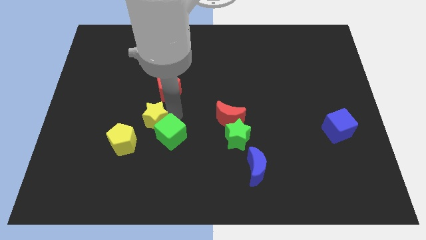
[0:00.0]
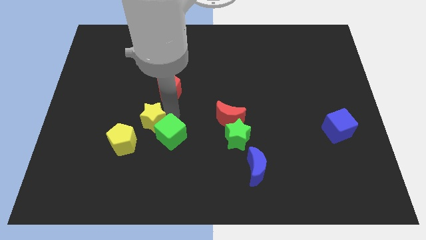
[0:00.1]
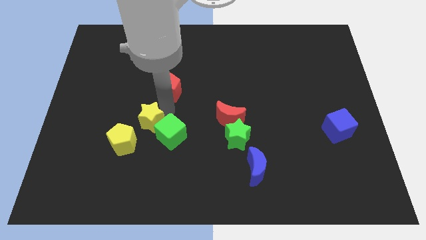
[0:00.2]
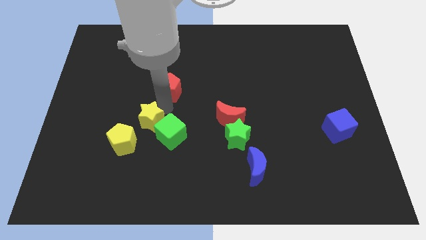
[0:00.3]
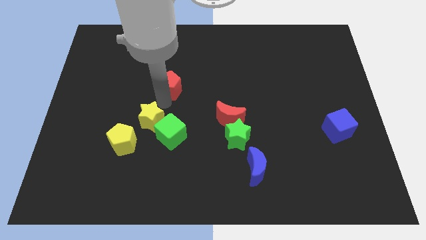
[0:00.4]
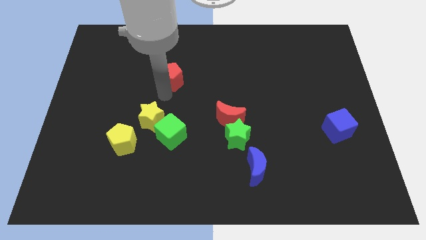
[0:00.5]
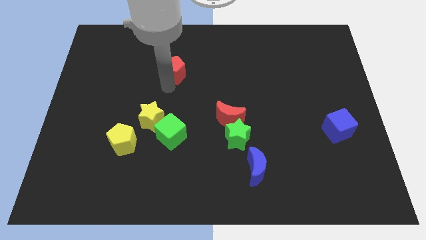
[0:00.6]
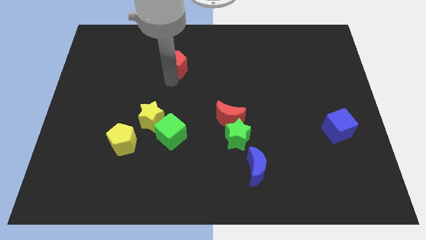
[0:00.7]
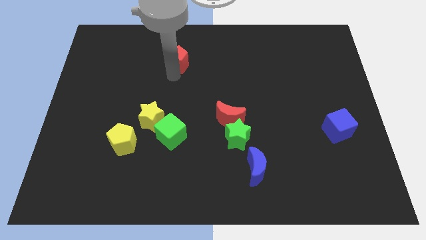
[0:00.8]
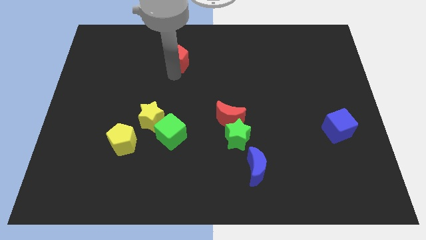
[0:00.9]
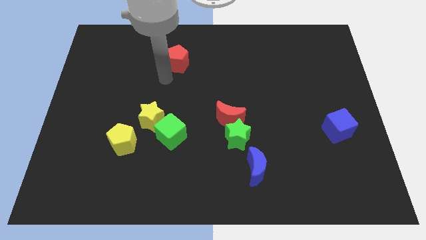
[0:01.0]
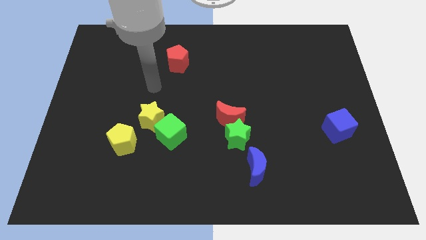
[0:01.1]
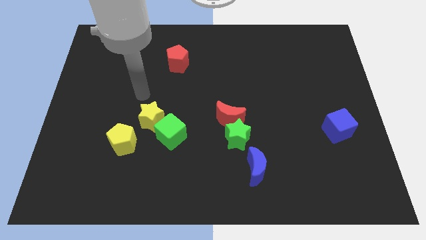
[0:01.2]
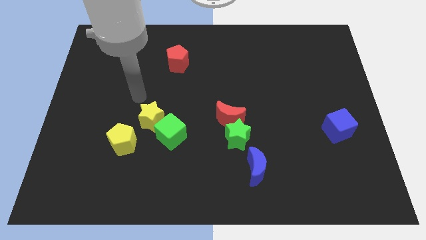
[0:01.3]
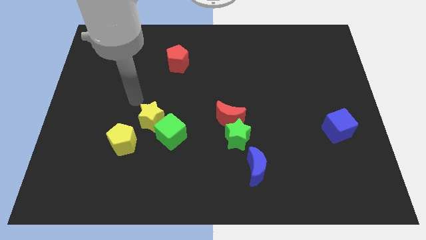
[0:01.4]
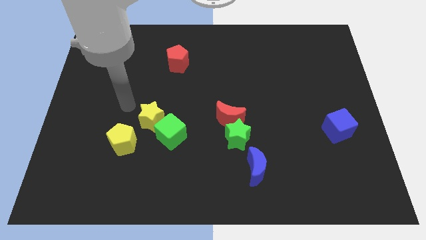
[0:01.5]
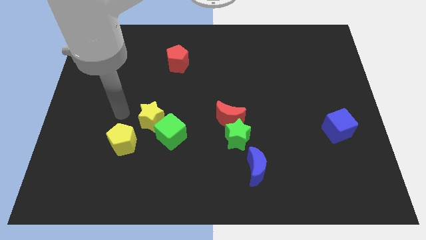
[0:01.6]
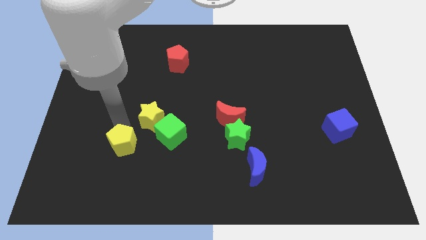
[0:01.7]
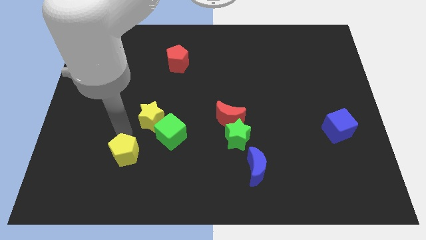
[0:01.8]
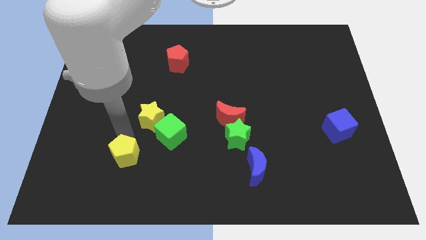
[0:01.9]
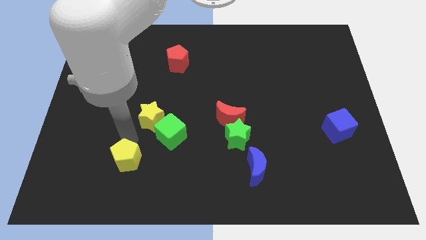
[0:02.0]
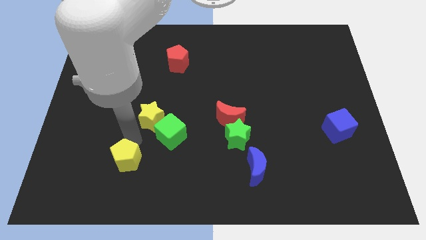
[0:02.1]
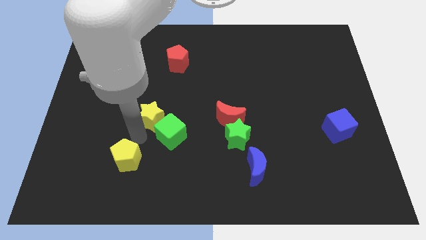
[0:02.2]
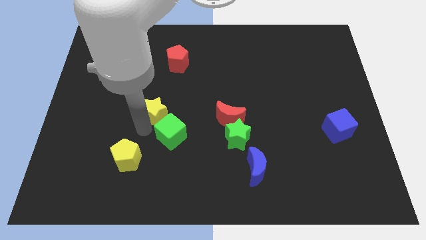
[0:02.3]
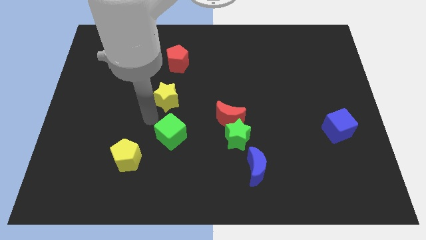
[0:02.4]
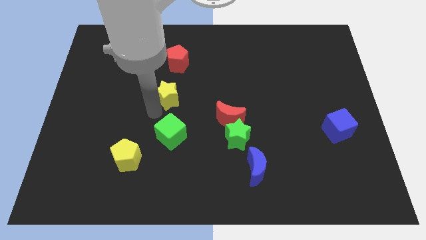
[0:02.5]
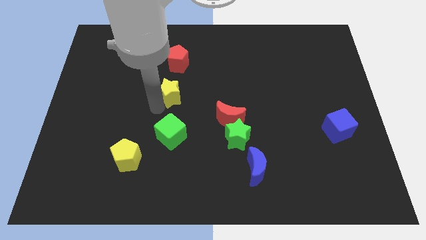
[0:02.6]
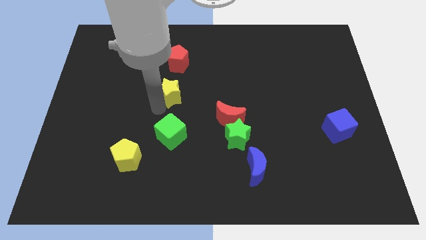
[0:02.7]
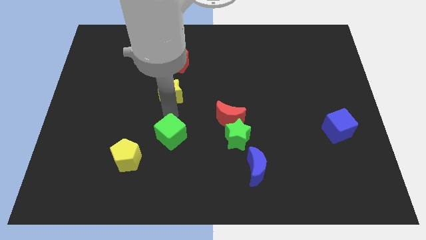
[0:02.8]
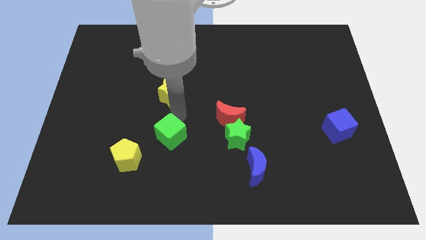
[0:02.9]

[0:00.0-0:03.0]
push yellow star below red pentagon

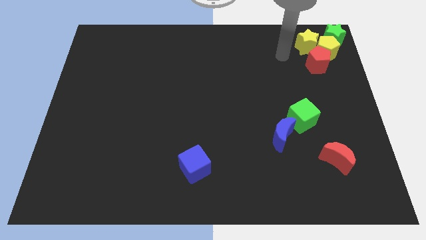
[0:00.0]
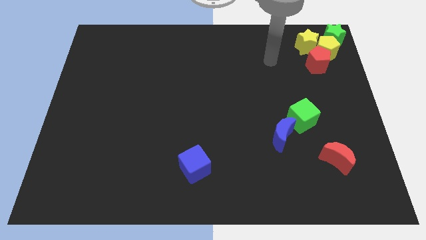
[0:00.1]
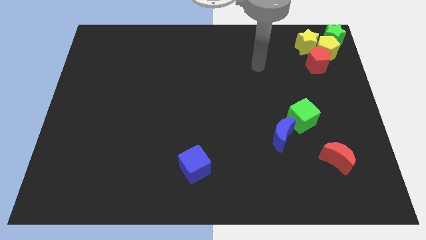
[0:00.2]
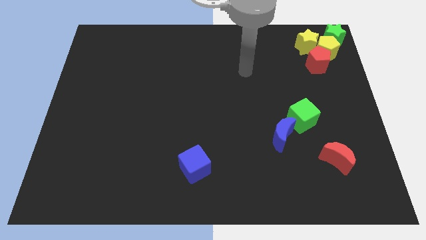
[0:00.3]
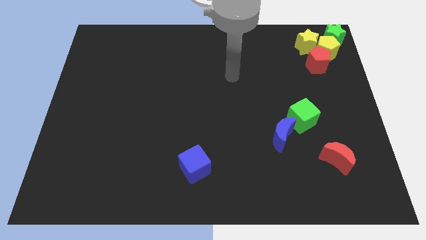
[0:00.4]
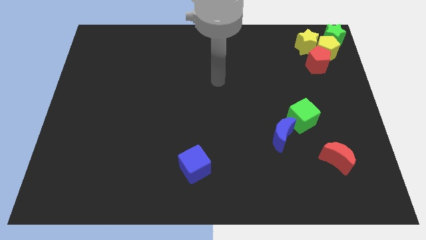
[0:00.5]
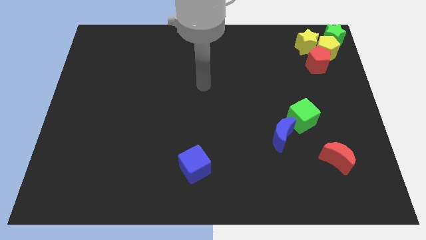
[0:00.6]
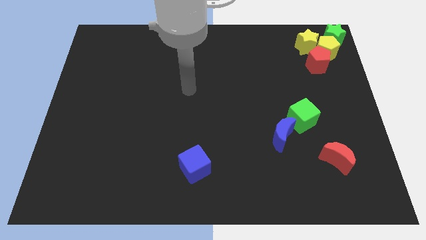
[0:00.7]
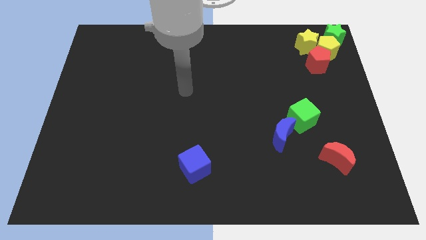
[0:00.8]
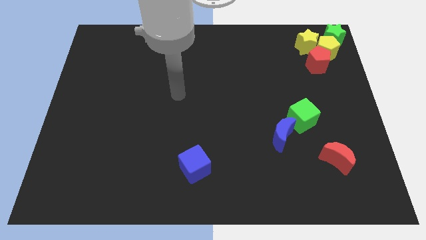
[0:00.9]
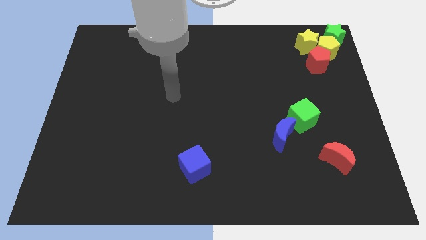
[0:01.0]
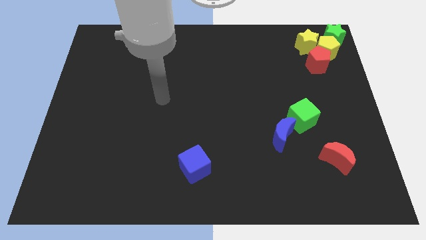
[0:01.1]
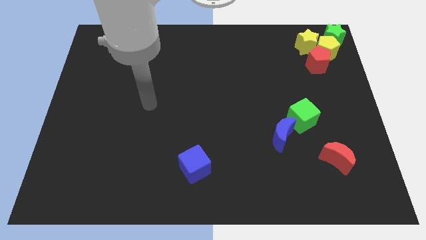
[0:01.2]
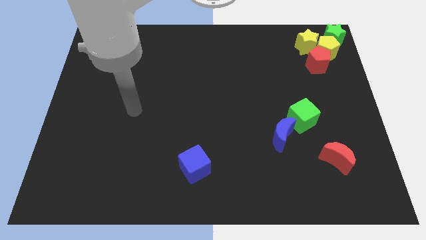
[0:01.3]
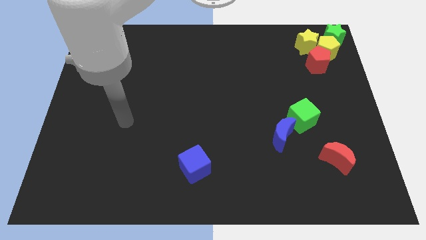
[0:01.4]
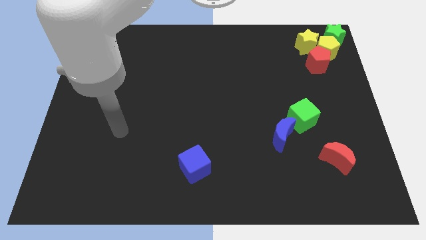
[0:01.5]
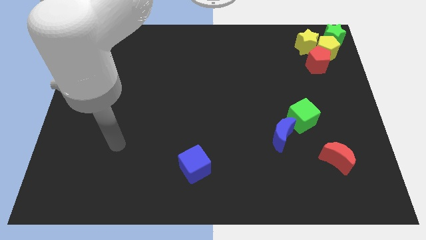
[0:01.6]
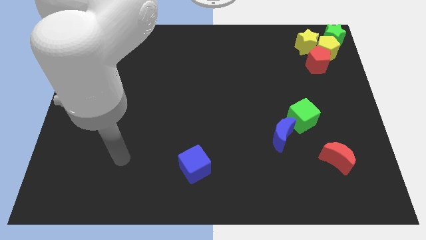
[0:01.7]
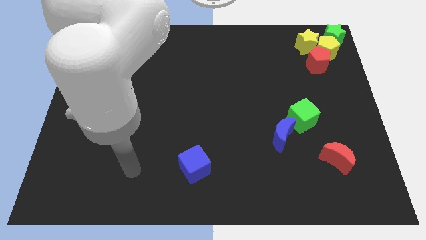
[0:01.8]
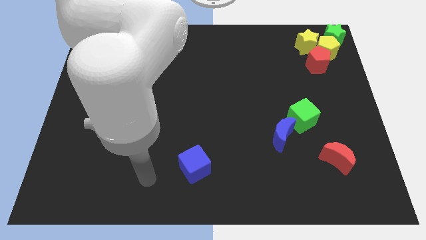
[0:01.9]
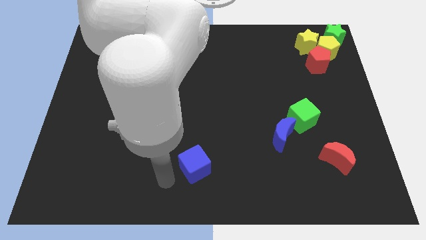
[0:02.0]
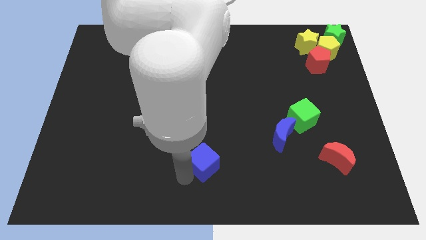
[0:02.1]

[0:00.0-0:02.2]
touch the left side of the blue cube

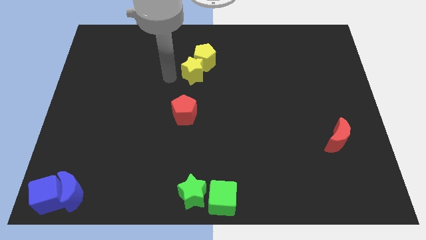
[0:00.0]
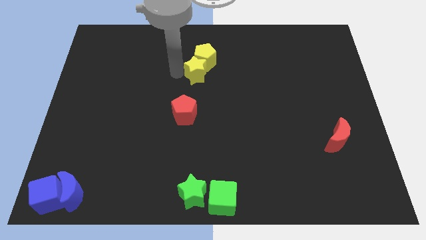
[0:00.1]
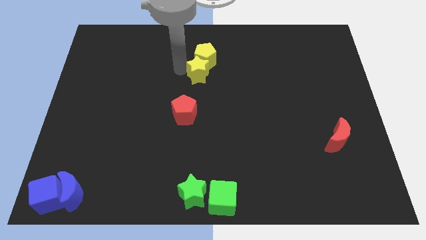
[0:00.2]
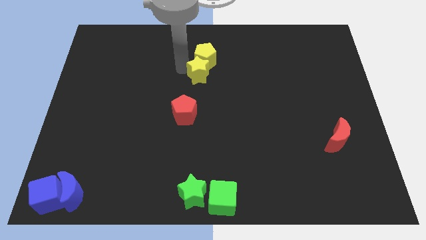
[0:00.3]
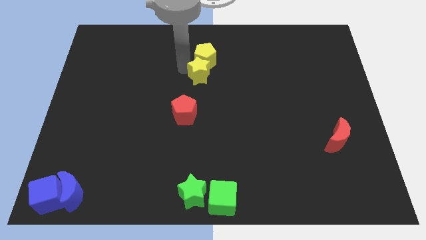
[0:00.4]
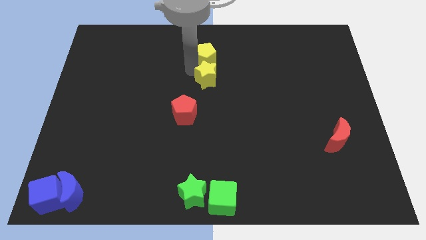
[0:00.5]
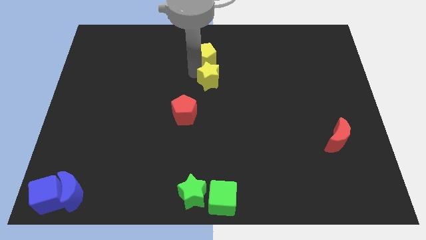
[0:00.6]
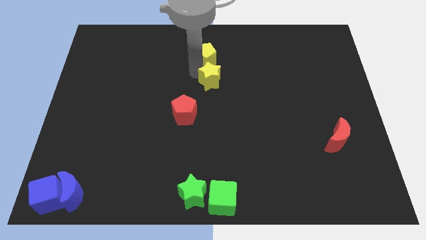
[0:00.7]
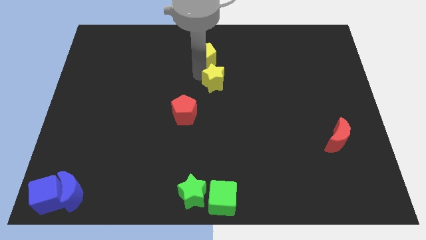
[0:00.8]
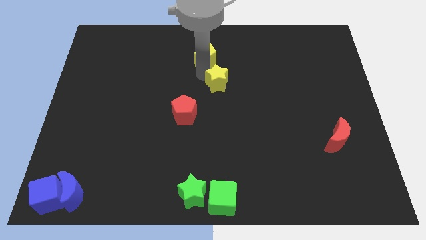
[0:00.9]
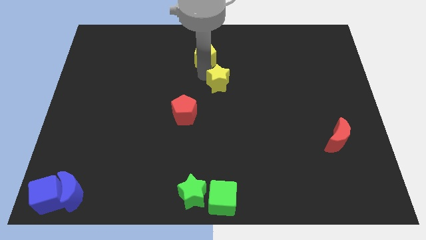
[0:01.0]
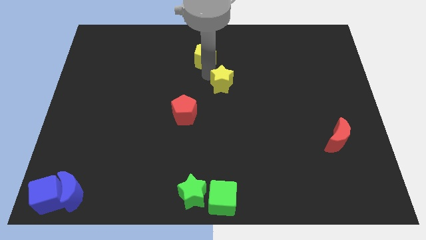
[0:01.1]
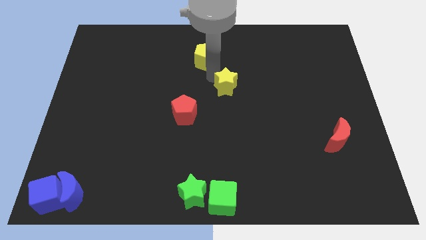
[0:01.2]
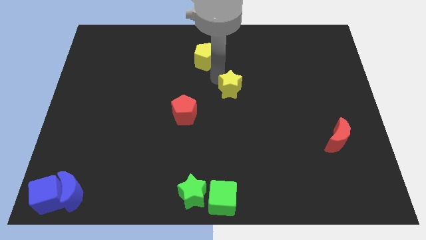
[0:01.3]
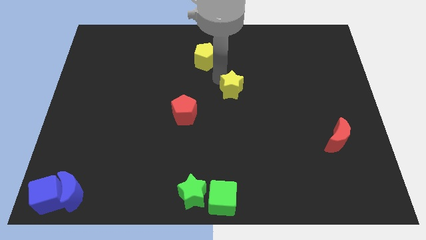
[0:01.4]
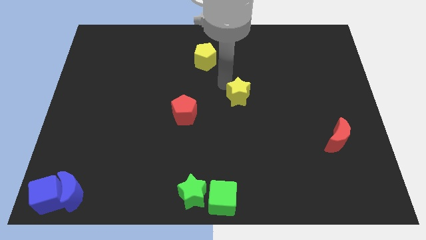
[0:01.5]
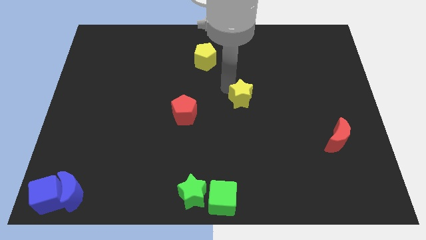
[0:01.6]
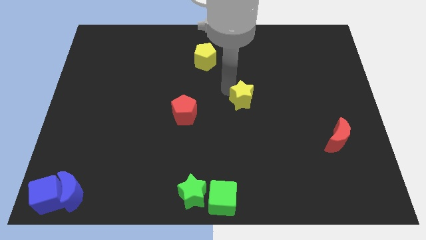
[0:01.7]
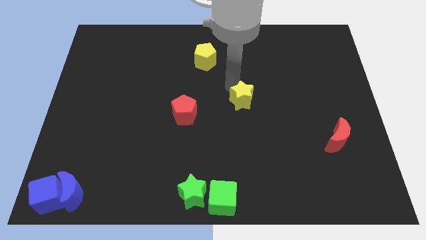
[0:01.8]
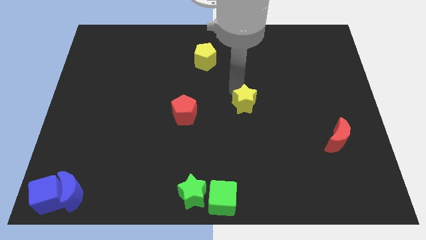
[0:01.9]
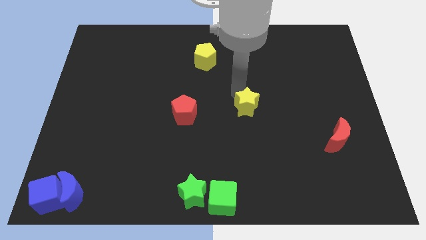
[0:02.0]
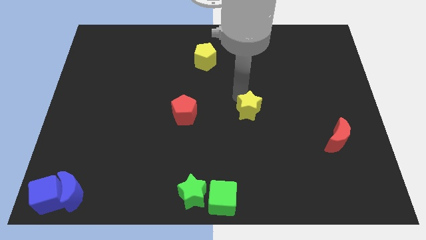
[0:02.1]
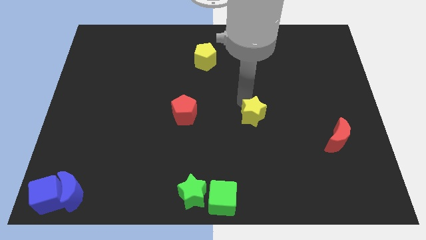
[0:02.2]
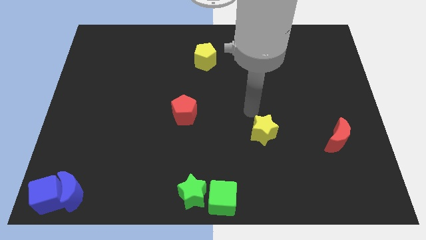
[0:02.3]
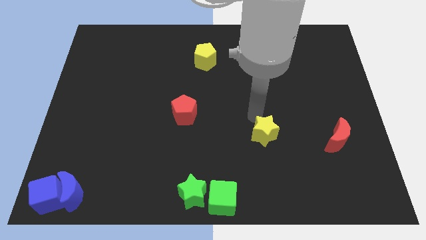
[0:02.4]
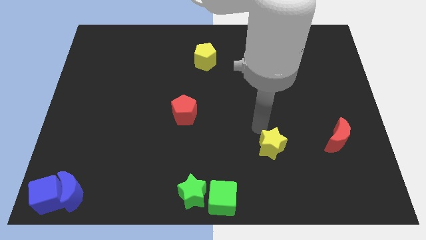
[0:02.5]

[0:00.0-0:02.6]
slide yellow star beside red pentagon

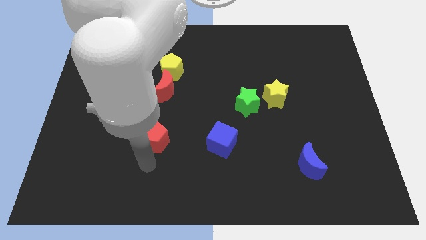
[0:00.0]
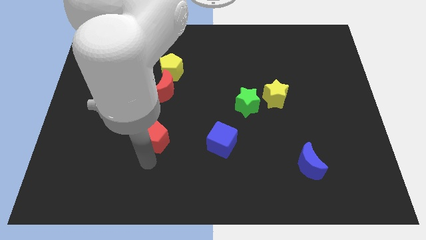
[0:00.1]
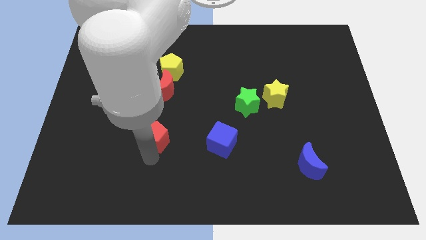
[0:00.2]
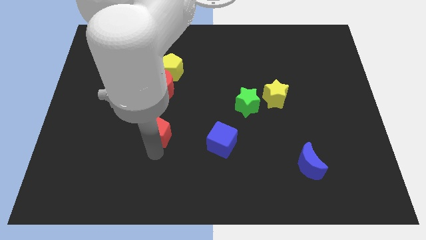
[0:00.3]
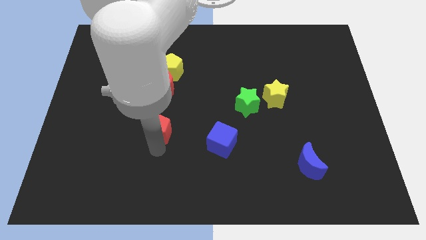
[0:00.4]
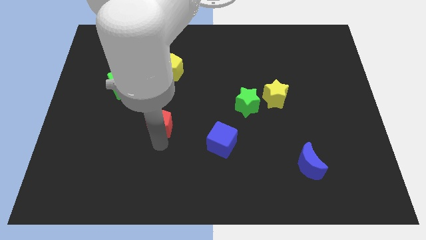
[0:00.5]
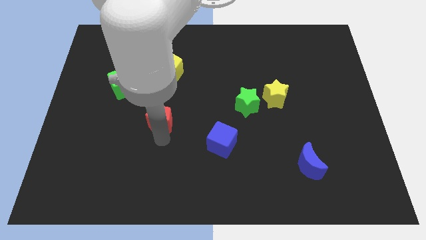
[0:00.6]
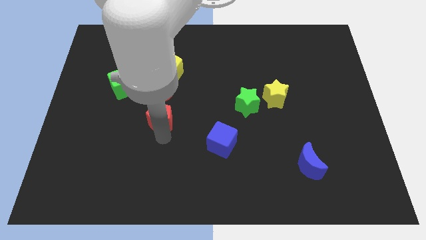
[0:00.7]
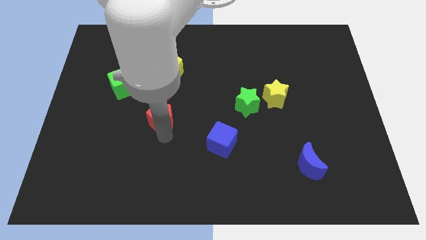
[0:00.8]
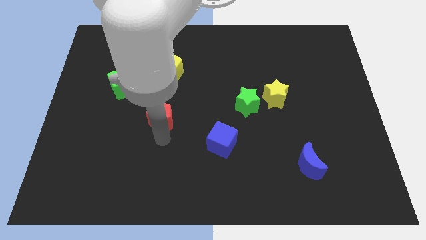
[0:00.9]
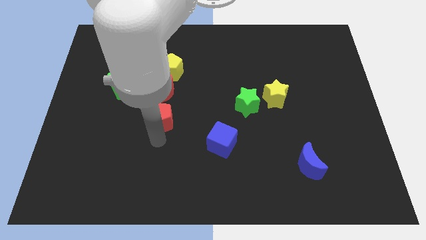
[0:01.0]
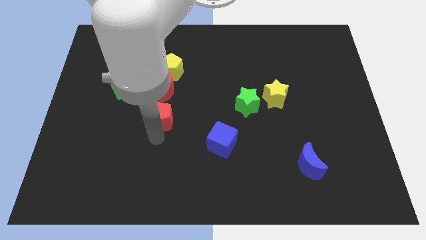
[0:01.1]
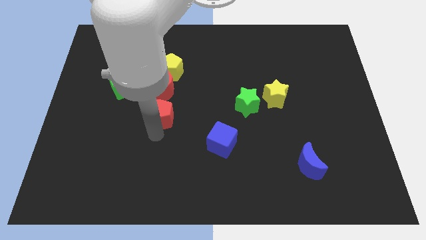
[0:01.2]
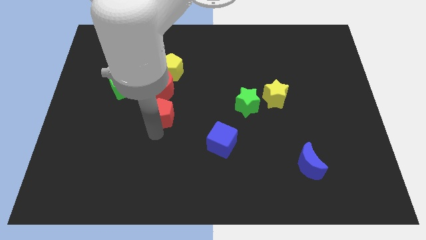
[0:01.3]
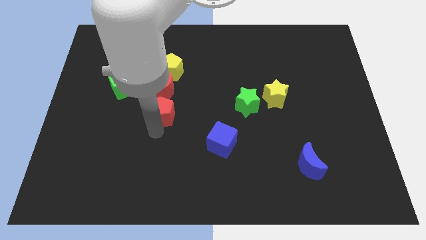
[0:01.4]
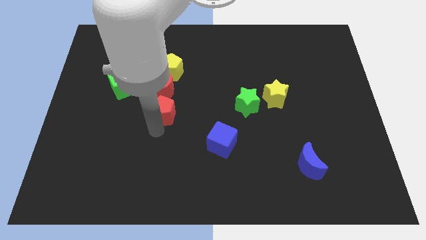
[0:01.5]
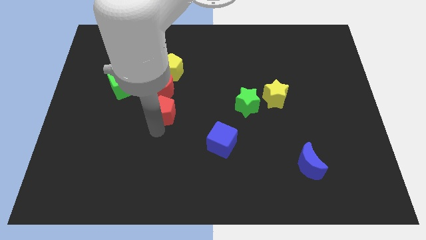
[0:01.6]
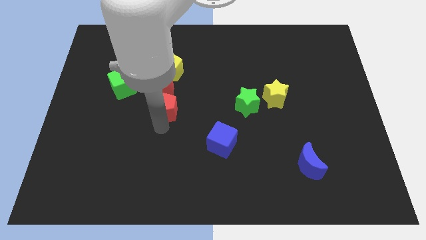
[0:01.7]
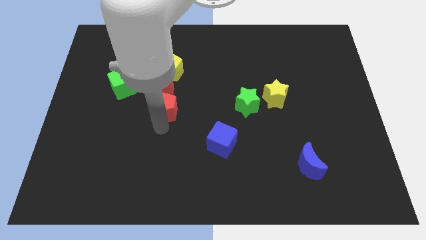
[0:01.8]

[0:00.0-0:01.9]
place the red pentagon close to the red crescent
